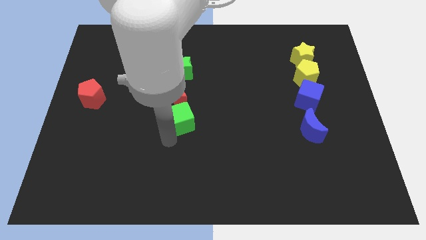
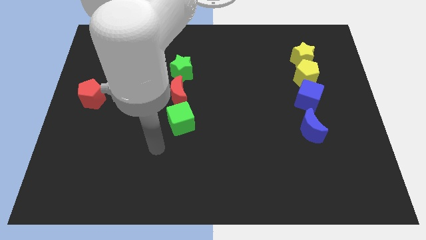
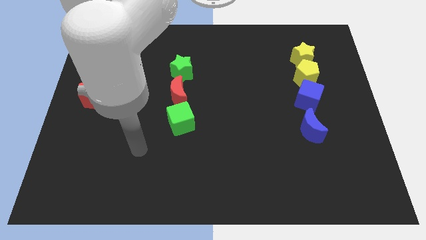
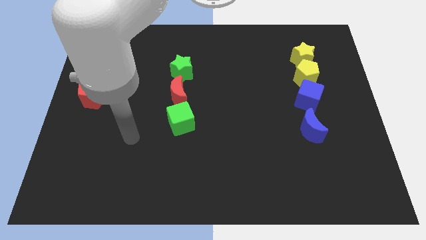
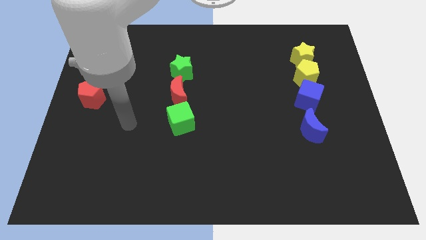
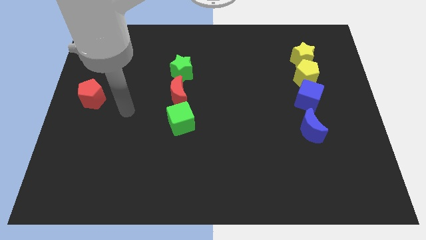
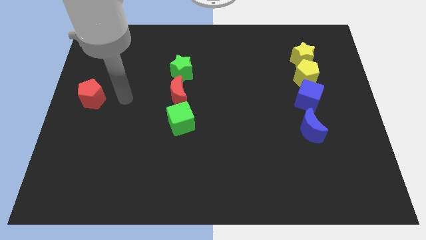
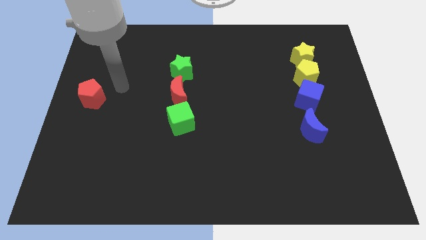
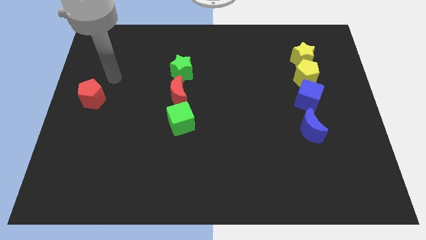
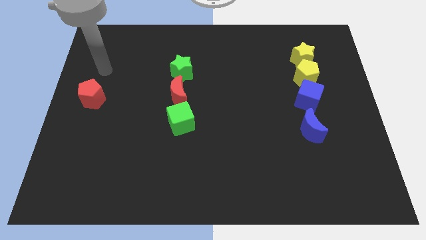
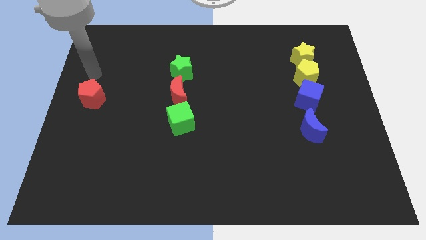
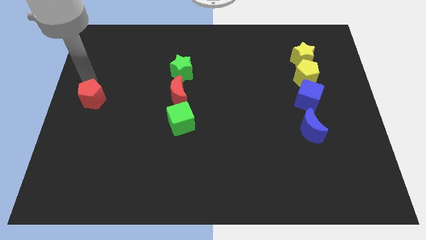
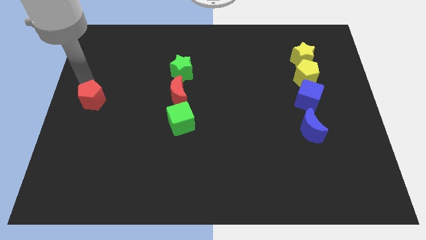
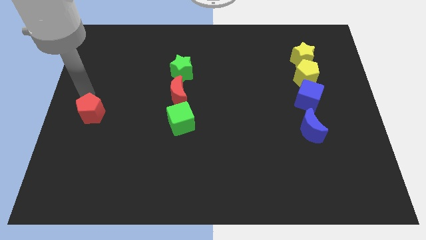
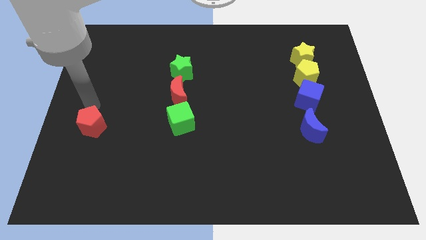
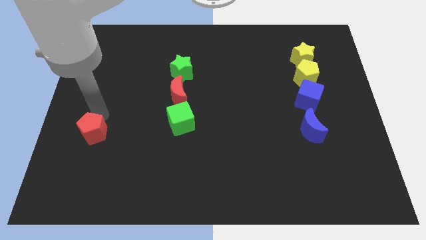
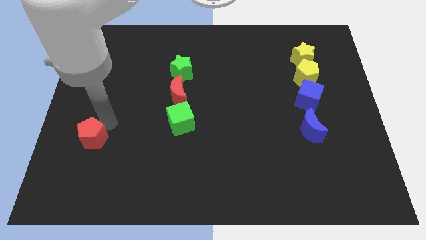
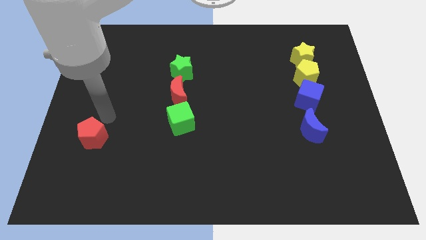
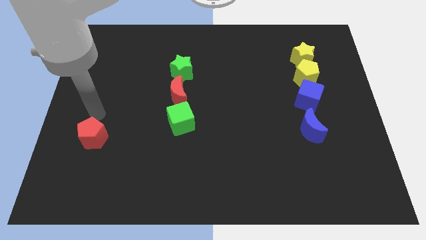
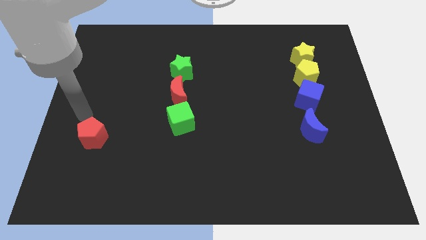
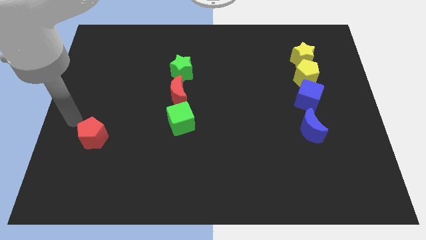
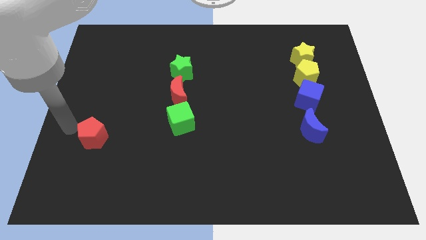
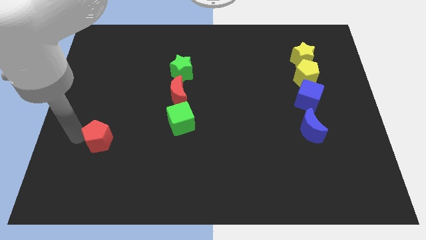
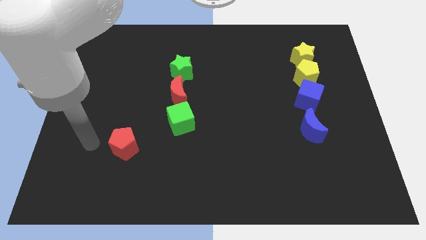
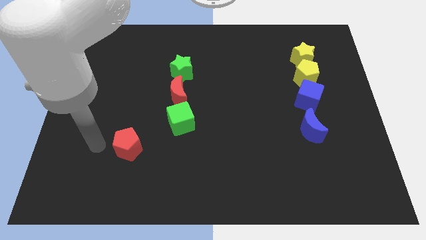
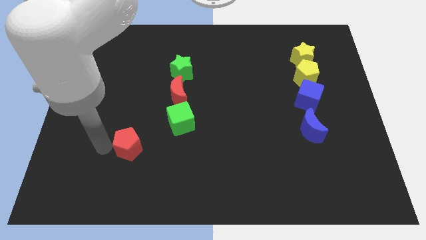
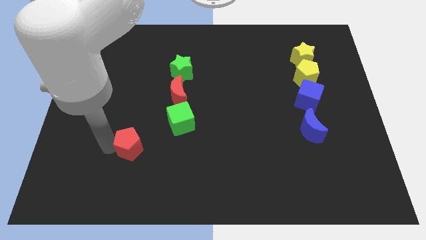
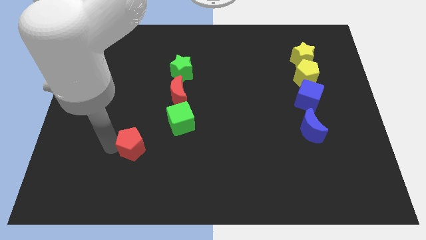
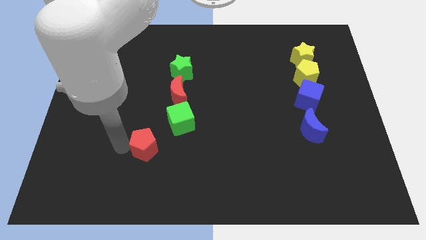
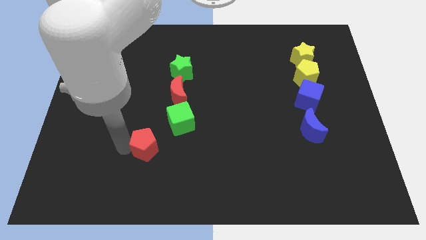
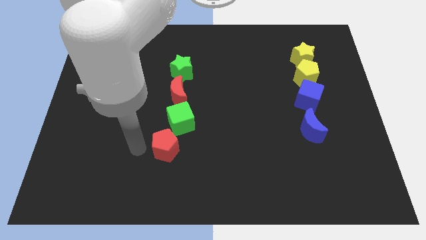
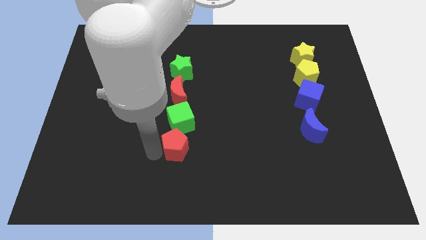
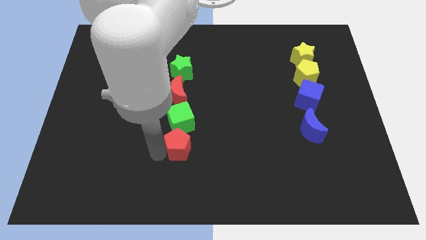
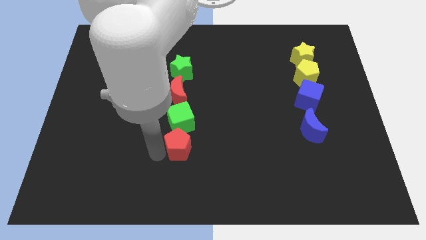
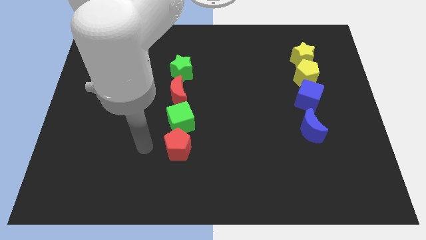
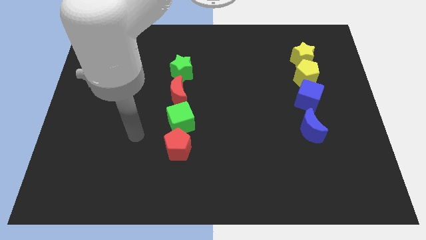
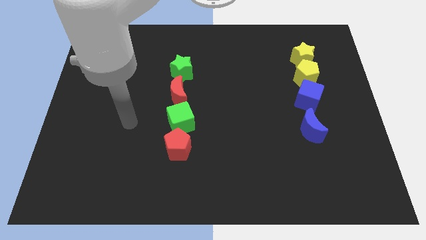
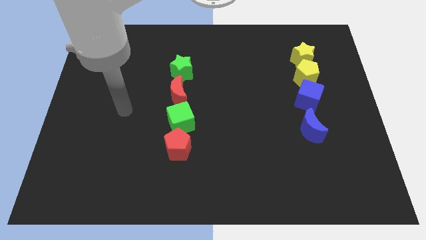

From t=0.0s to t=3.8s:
push the red pentagon below the green cube

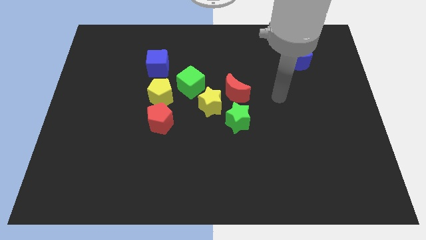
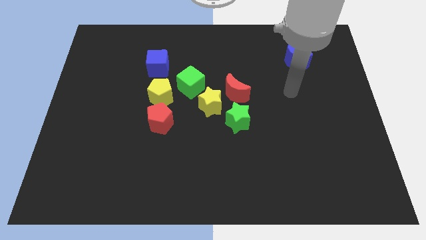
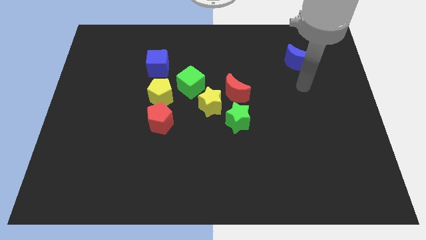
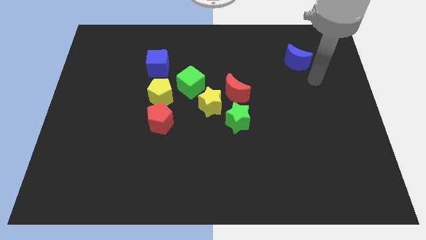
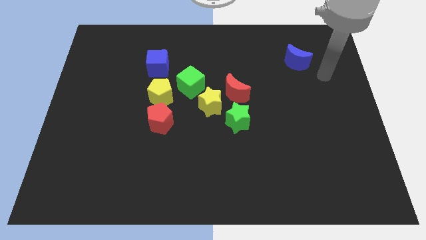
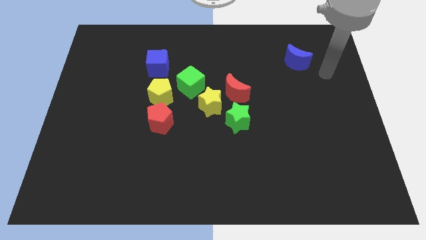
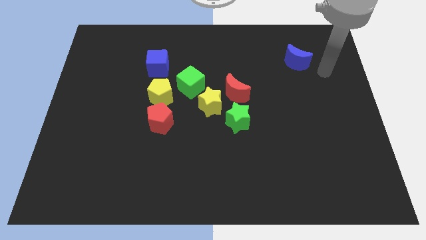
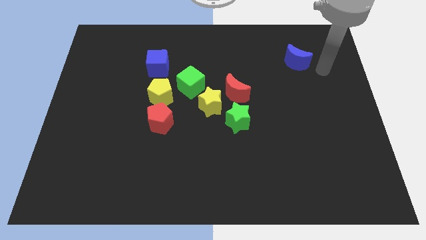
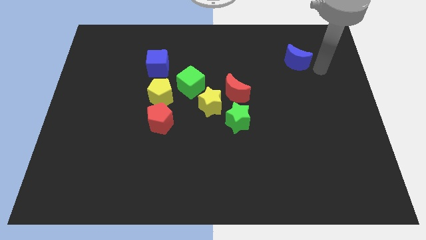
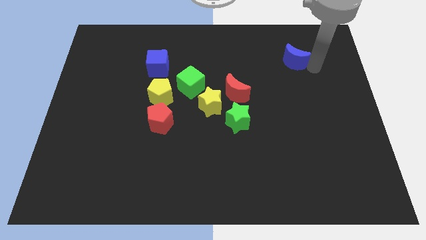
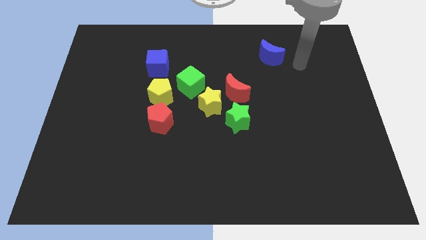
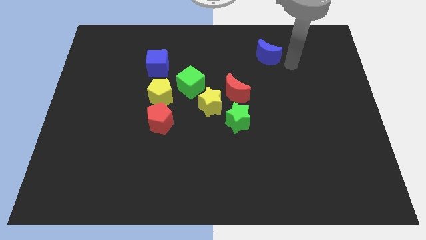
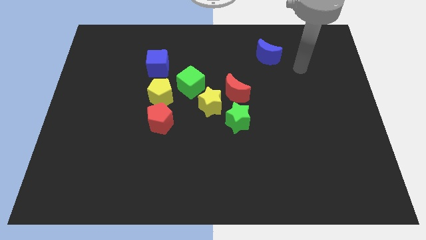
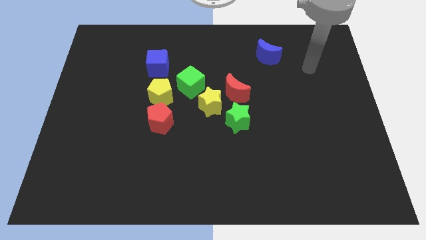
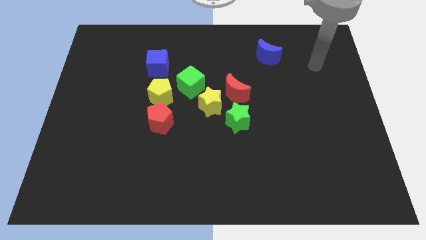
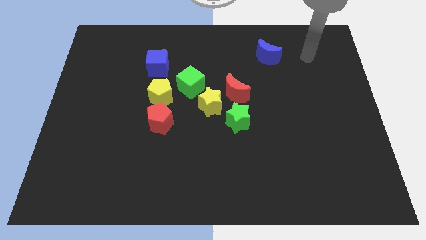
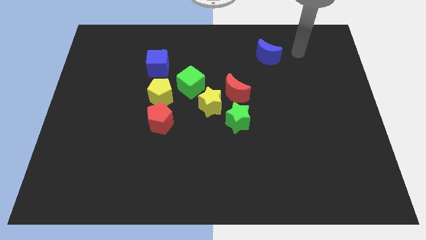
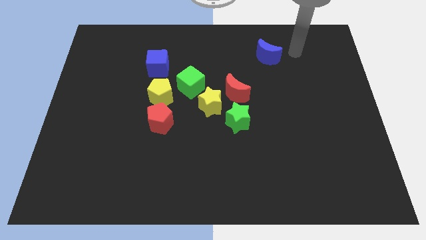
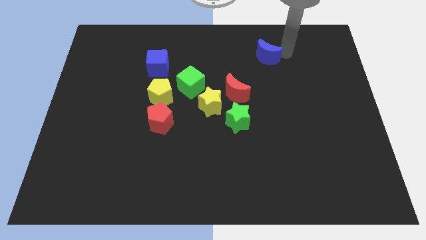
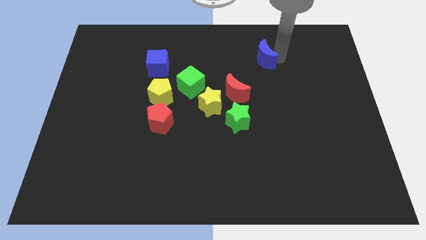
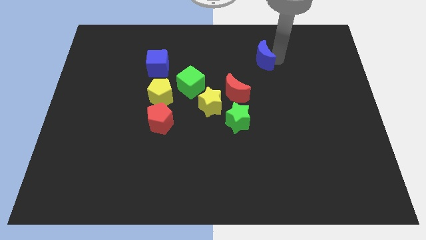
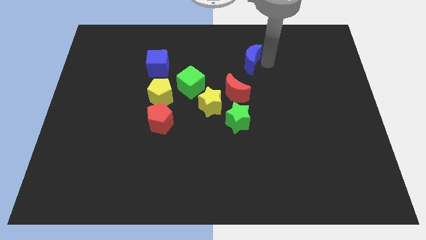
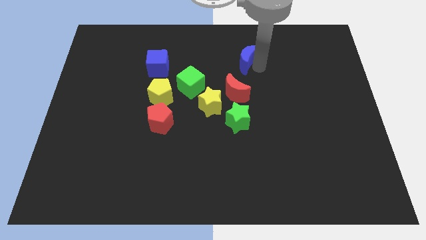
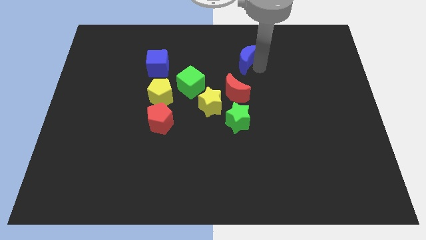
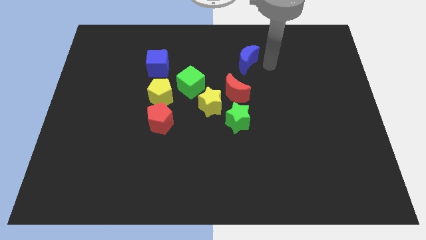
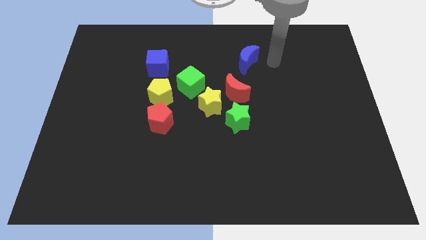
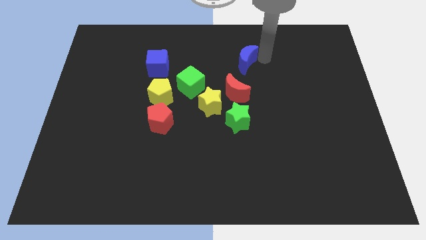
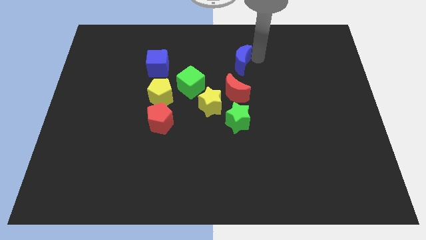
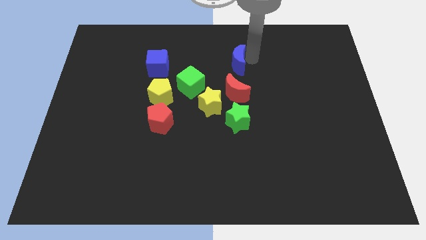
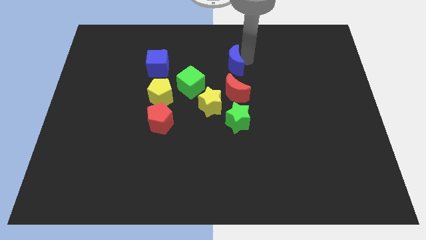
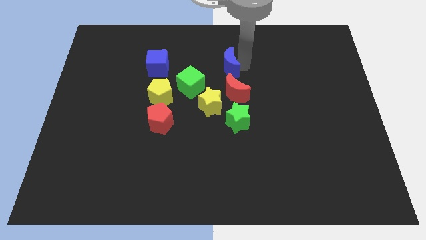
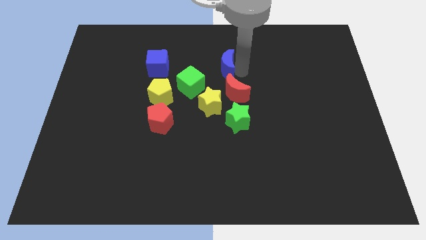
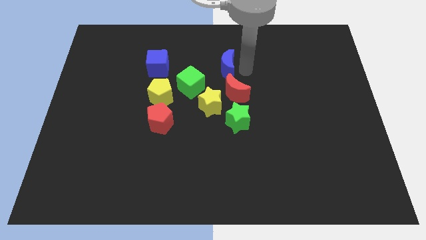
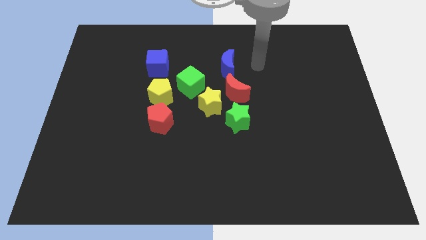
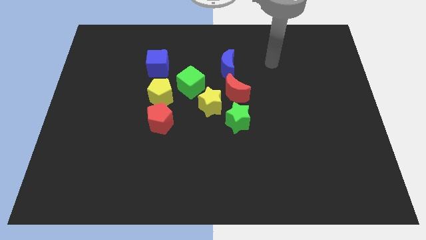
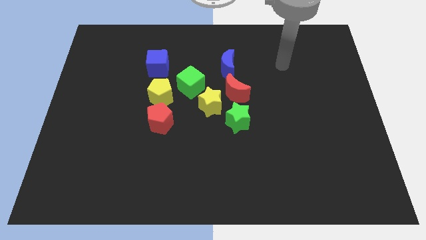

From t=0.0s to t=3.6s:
move the blue crescent to the top of the red crescent

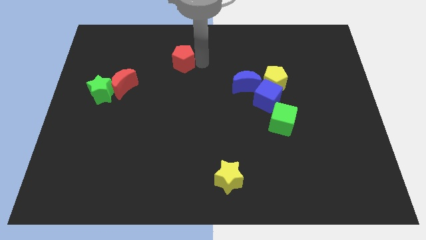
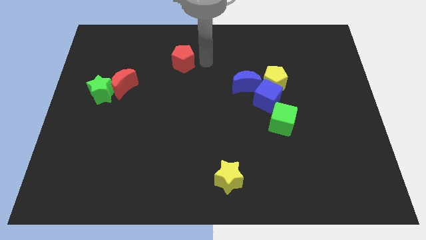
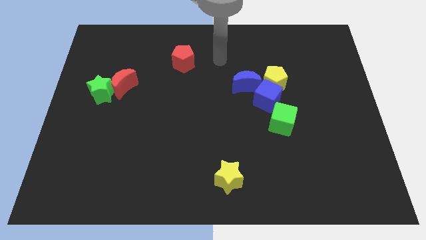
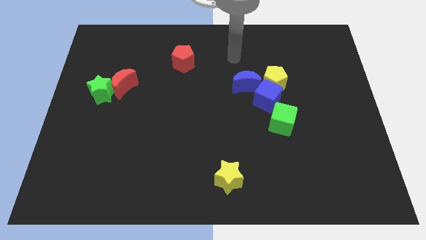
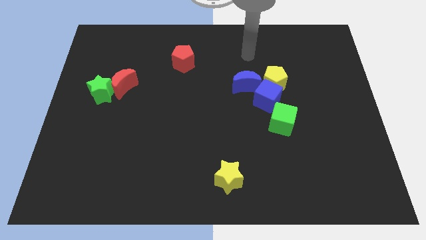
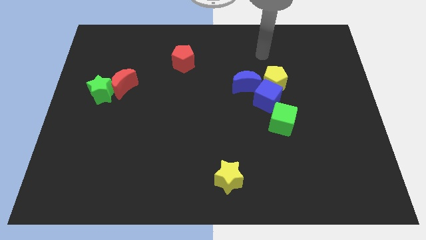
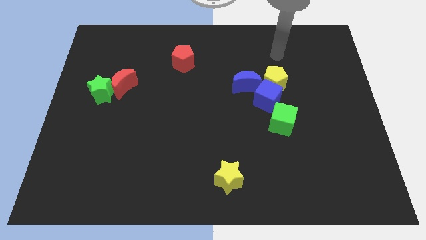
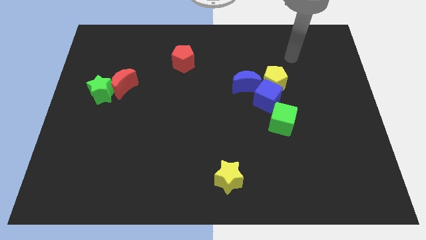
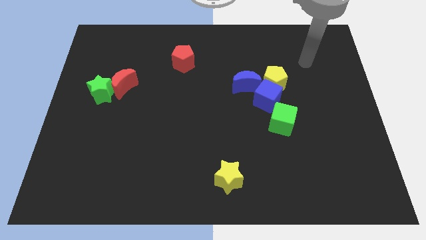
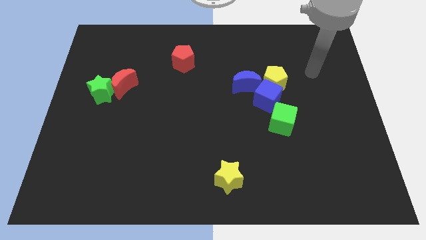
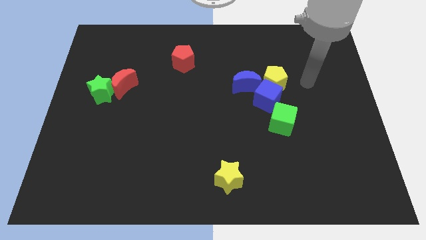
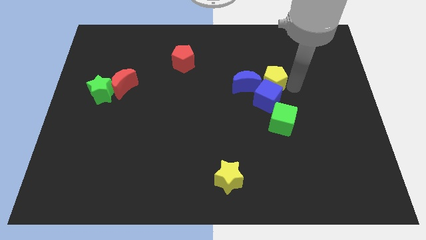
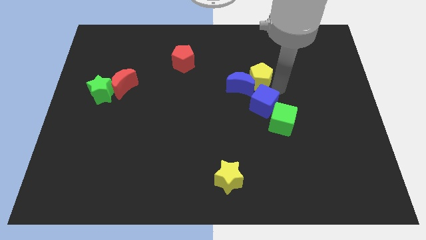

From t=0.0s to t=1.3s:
point your arm at the right of the yellow pentagon

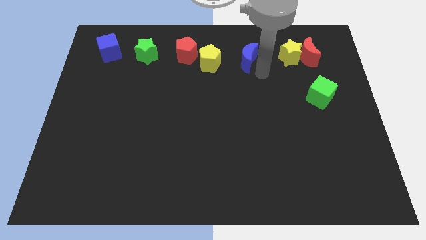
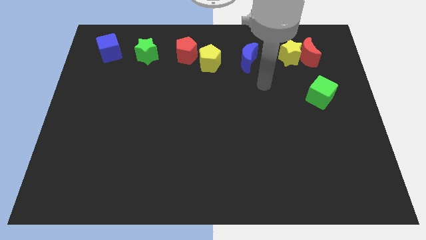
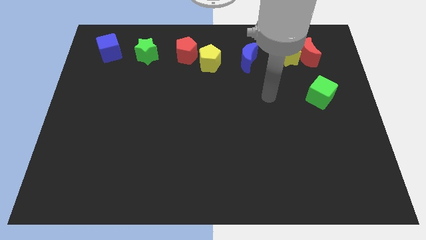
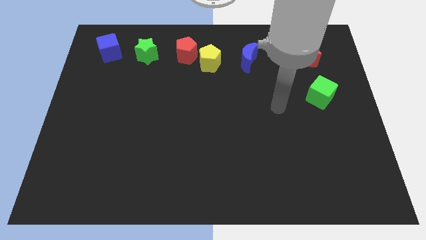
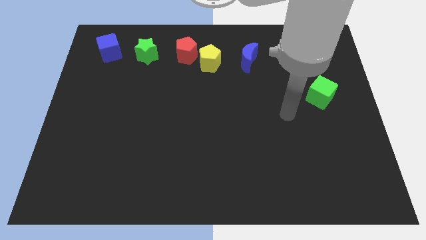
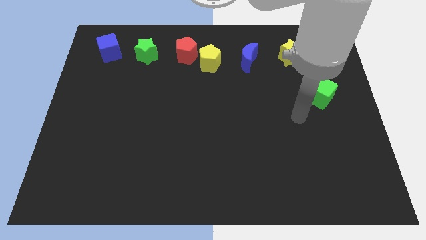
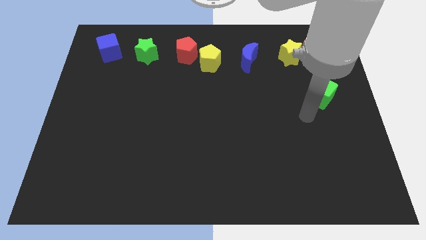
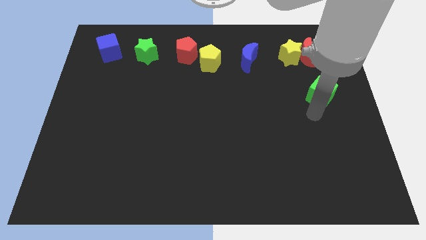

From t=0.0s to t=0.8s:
place the arm down to the green cube
